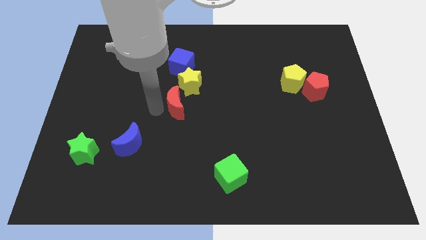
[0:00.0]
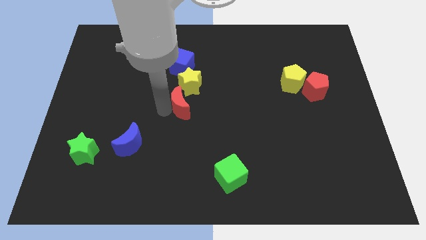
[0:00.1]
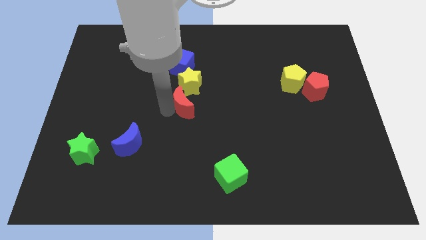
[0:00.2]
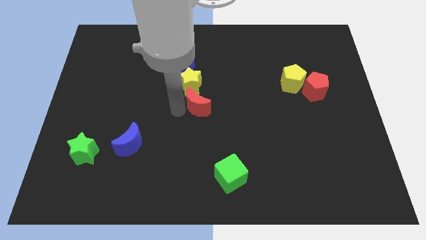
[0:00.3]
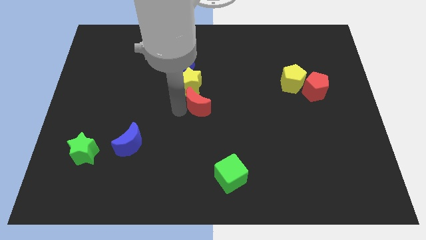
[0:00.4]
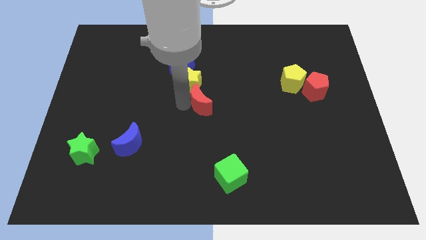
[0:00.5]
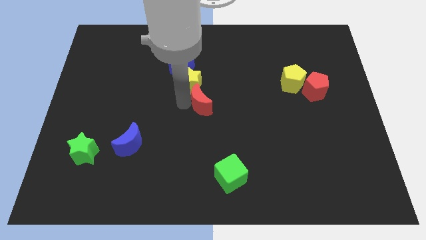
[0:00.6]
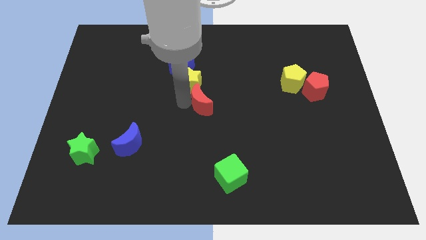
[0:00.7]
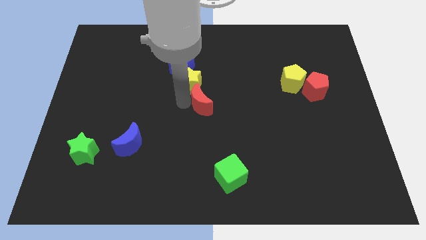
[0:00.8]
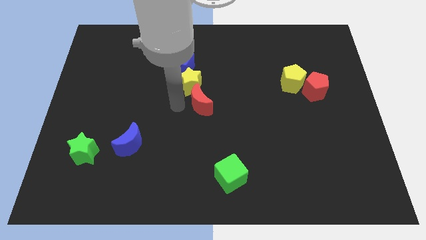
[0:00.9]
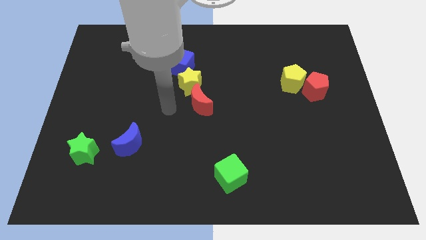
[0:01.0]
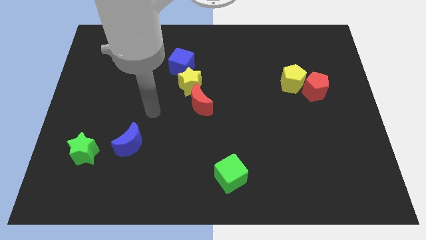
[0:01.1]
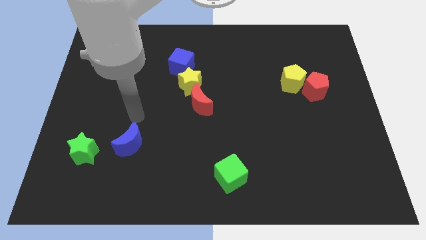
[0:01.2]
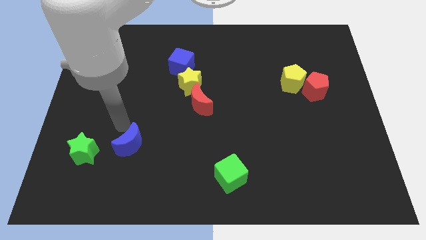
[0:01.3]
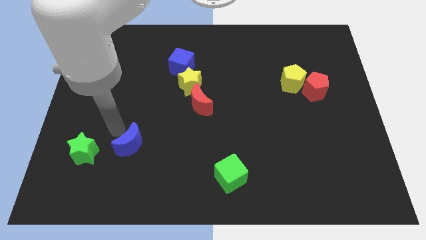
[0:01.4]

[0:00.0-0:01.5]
put the red moon at the bottom right of the yellow star

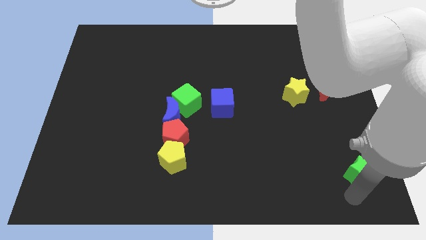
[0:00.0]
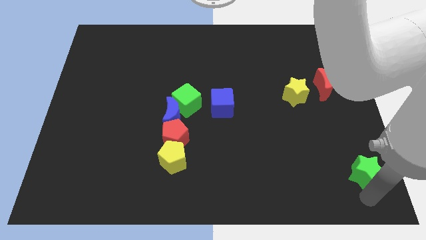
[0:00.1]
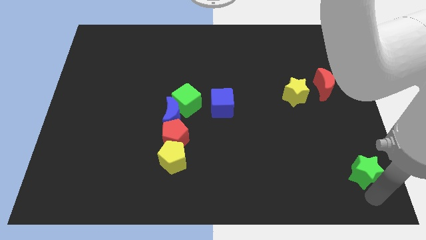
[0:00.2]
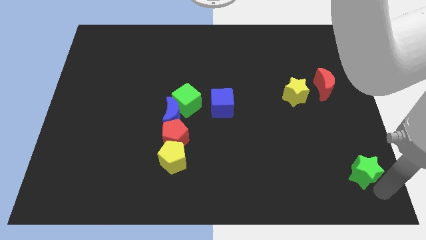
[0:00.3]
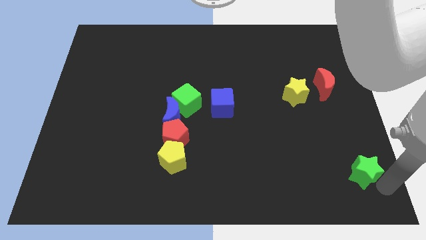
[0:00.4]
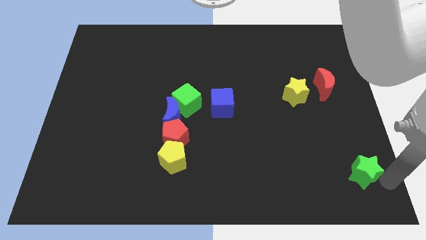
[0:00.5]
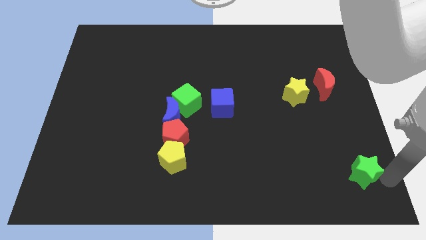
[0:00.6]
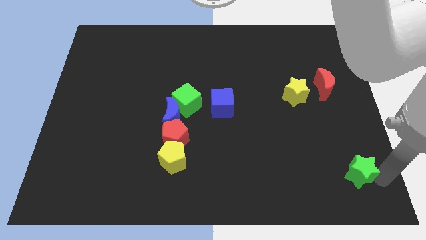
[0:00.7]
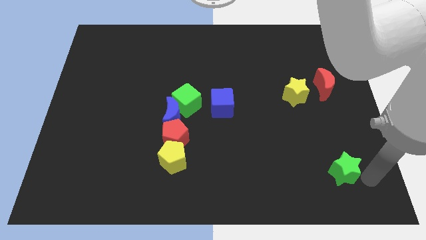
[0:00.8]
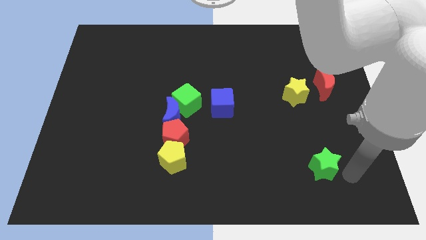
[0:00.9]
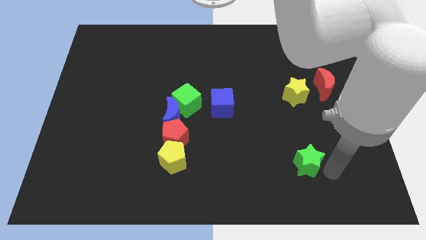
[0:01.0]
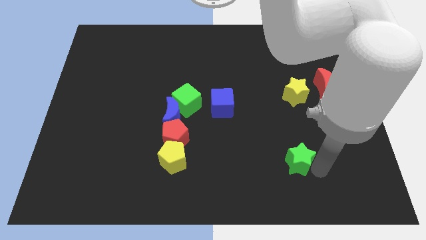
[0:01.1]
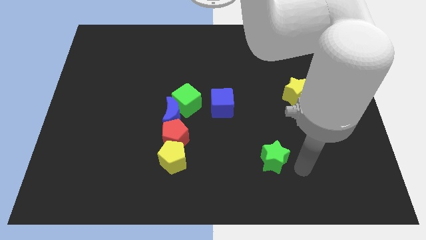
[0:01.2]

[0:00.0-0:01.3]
push the green star towards center

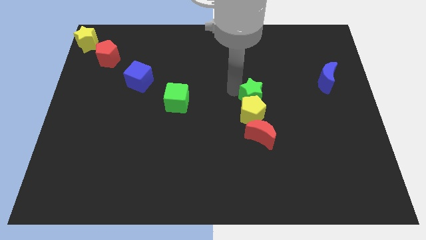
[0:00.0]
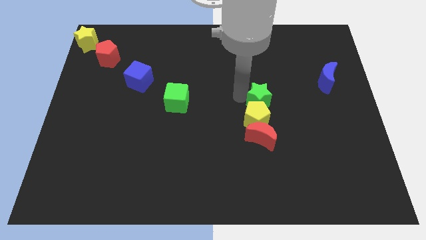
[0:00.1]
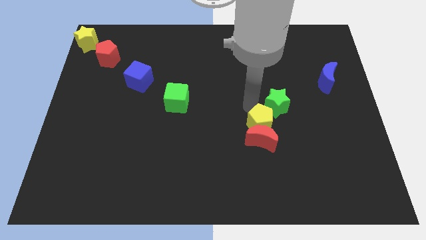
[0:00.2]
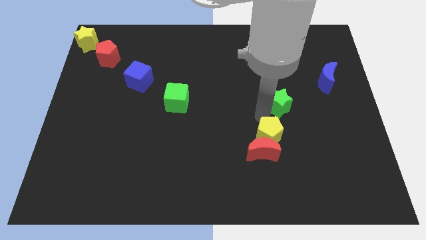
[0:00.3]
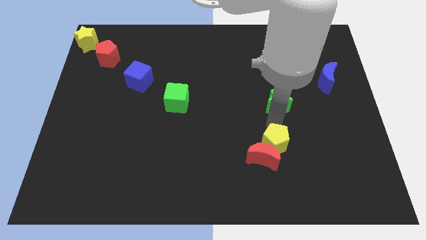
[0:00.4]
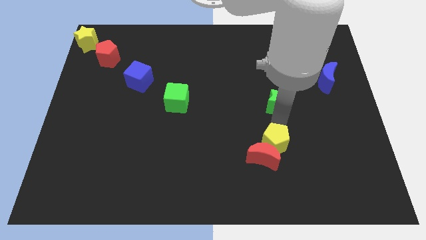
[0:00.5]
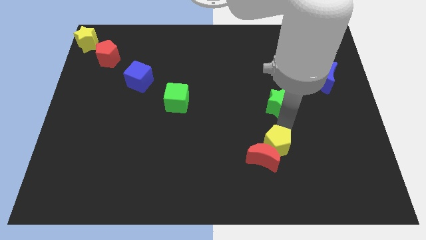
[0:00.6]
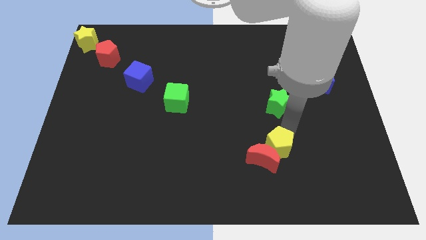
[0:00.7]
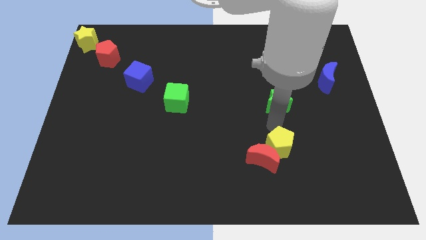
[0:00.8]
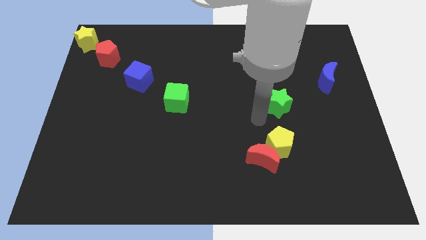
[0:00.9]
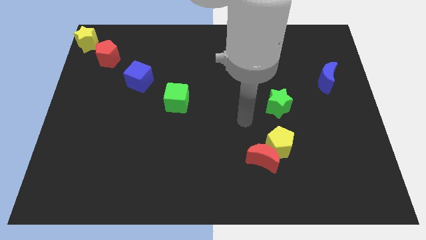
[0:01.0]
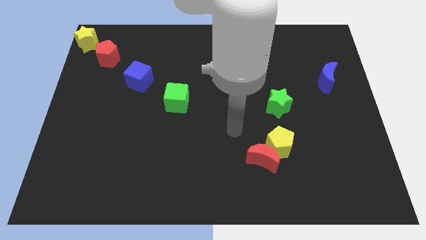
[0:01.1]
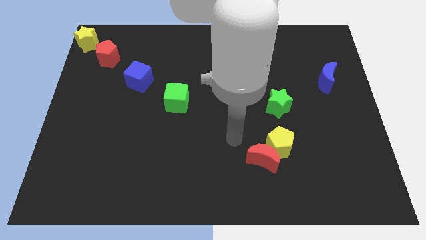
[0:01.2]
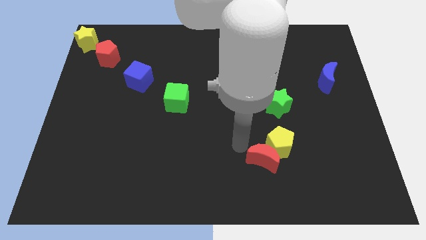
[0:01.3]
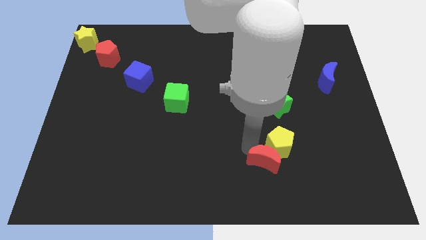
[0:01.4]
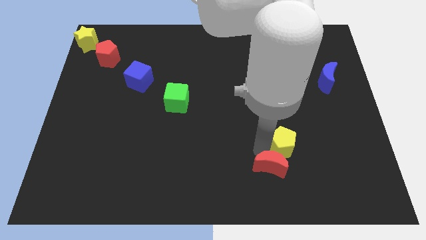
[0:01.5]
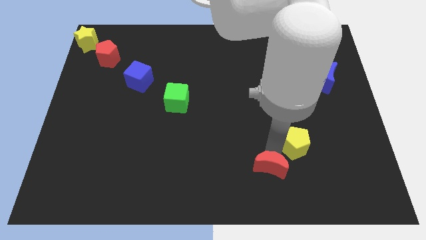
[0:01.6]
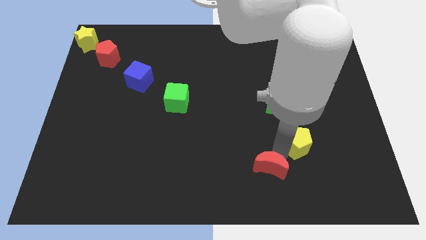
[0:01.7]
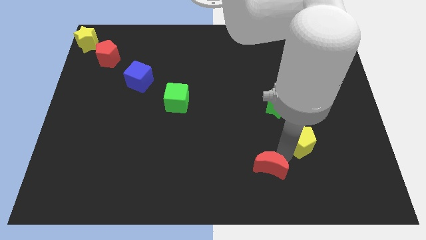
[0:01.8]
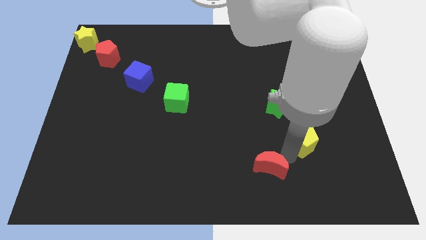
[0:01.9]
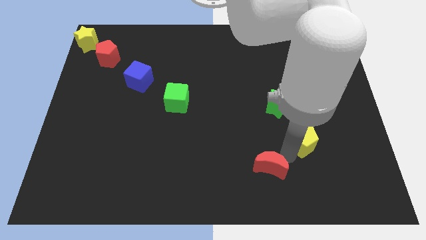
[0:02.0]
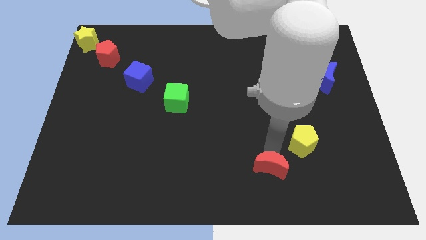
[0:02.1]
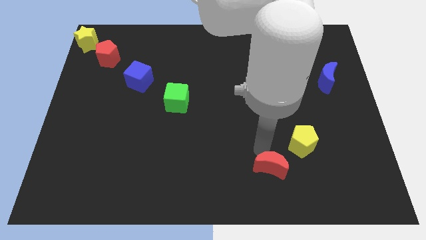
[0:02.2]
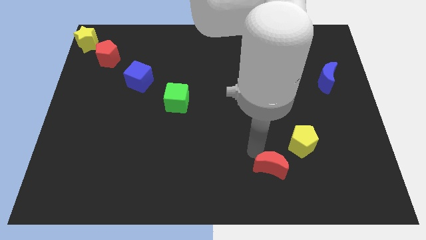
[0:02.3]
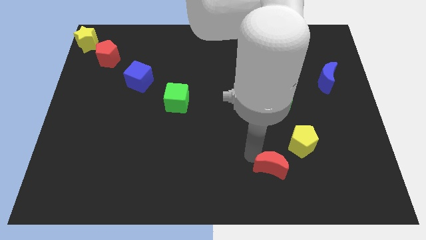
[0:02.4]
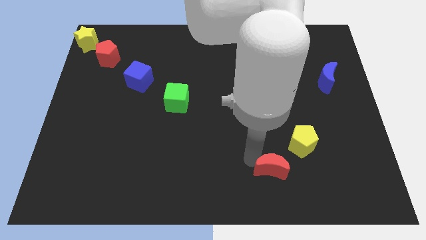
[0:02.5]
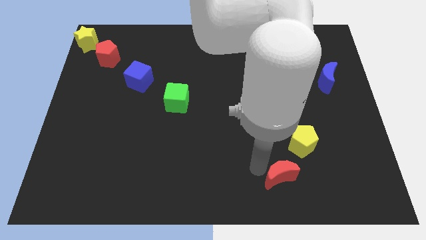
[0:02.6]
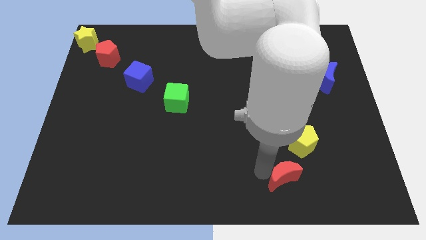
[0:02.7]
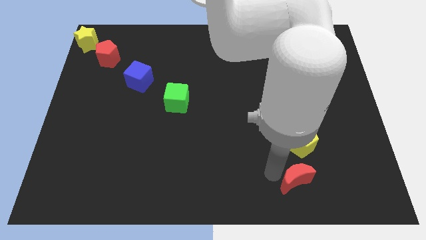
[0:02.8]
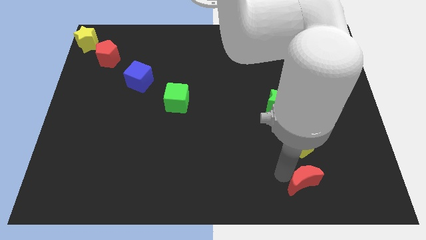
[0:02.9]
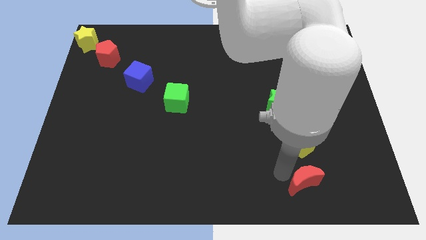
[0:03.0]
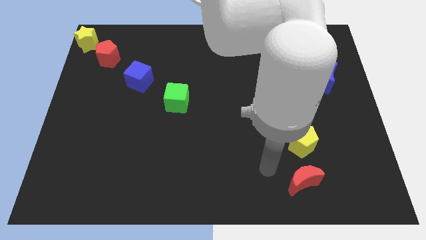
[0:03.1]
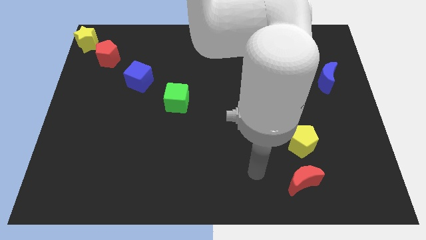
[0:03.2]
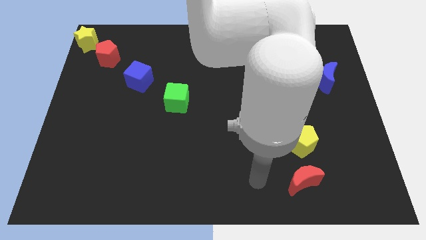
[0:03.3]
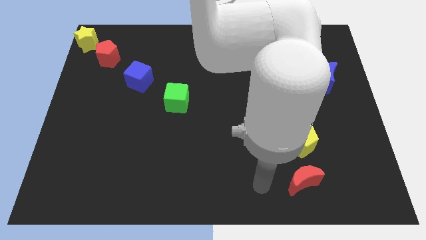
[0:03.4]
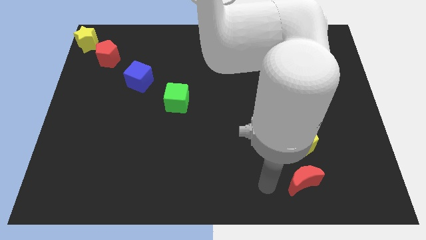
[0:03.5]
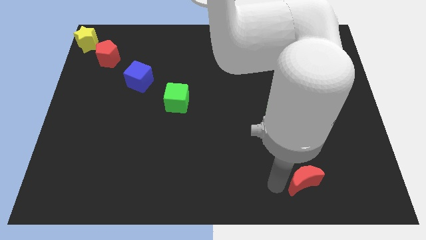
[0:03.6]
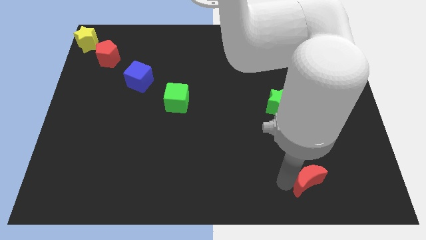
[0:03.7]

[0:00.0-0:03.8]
place red moon to the bottom of yellow pentagon

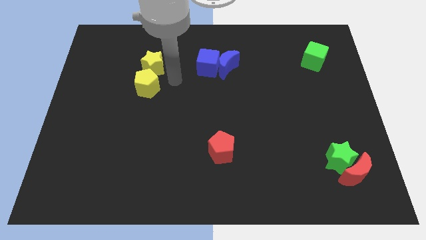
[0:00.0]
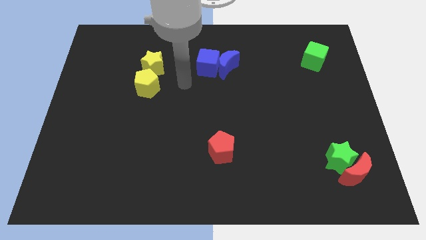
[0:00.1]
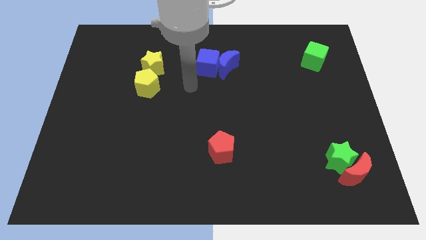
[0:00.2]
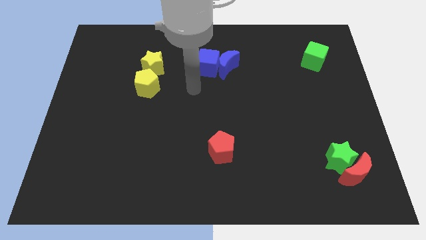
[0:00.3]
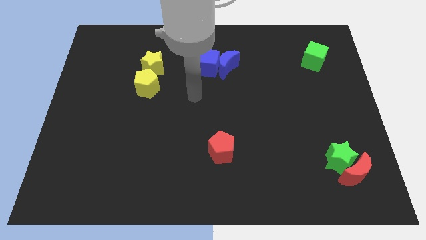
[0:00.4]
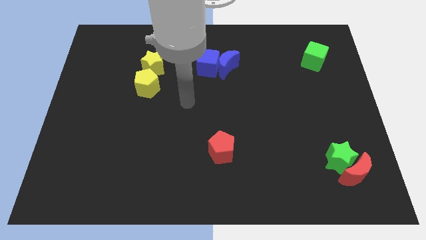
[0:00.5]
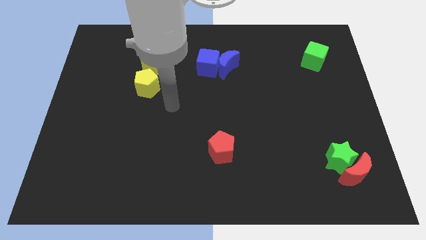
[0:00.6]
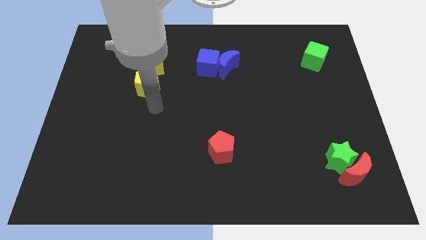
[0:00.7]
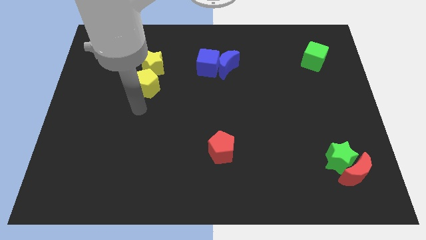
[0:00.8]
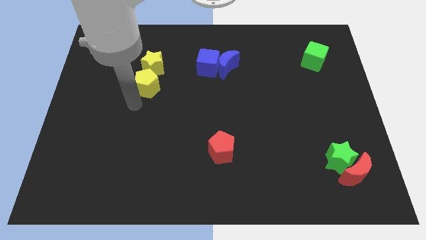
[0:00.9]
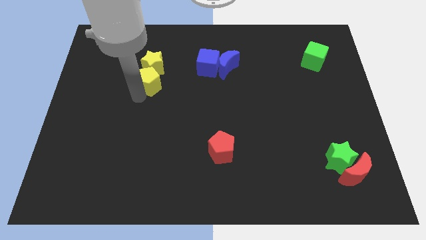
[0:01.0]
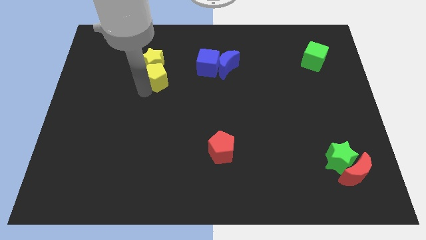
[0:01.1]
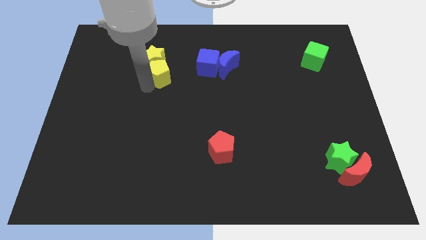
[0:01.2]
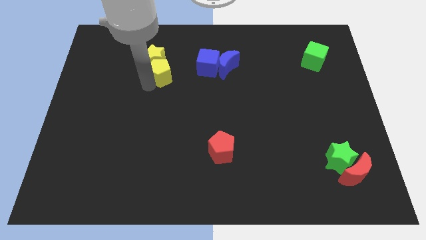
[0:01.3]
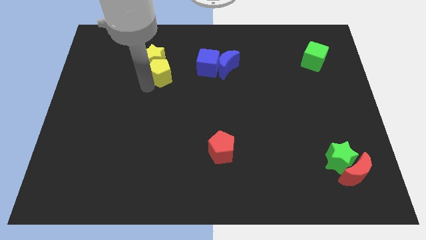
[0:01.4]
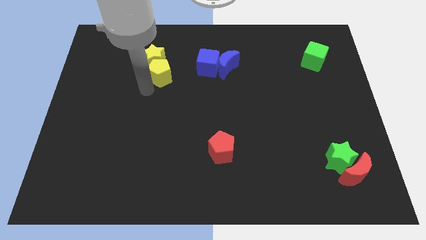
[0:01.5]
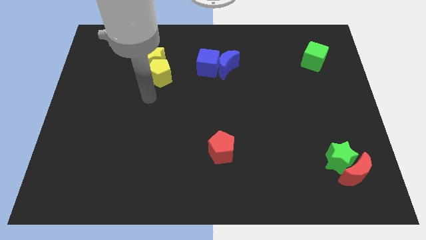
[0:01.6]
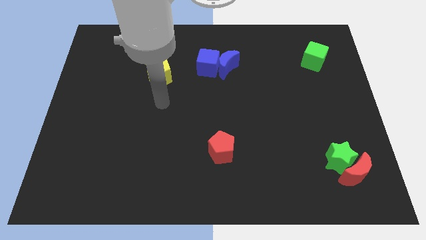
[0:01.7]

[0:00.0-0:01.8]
push the yellow blocks slightly to the top

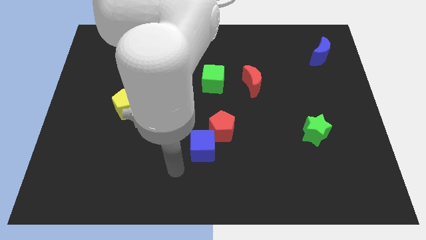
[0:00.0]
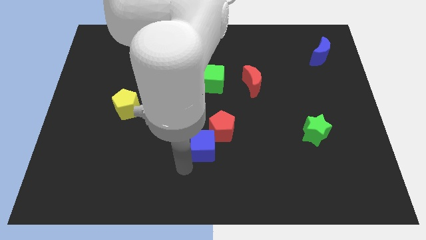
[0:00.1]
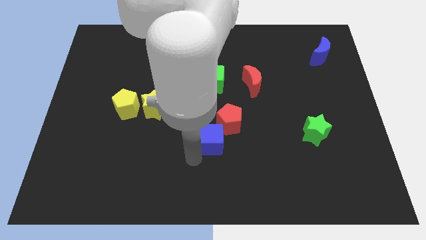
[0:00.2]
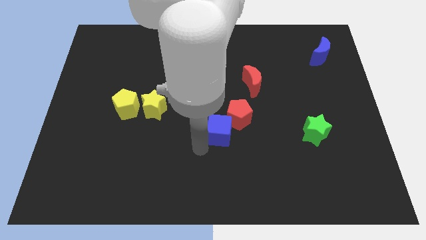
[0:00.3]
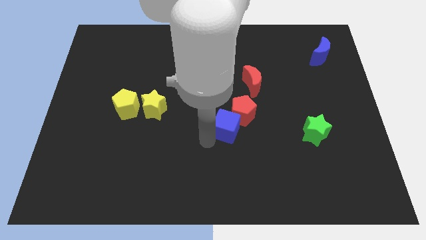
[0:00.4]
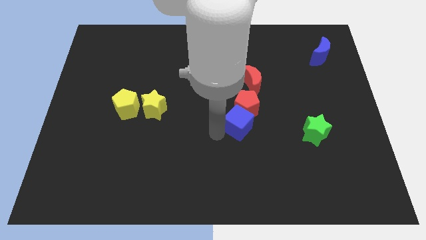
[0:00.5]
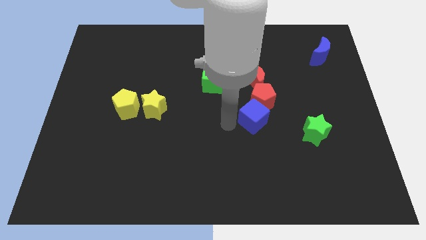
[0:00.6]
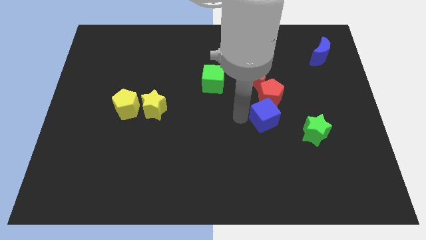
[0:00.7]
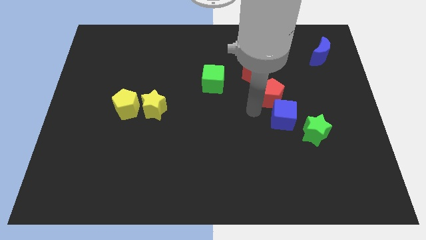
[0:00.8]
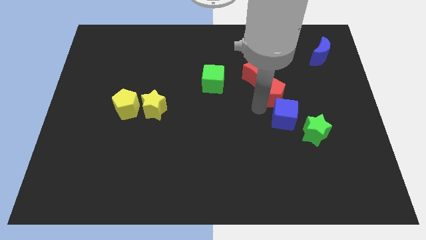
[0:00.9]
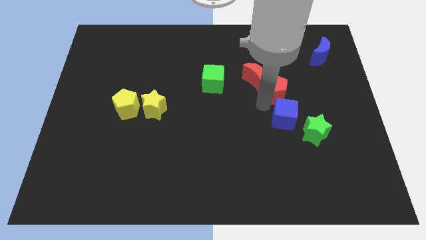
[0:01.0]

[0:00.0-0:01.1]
push the red pentagon into red moon with blue cube
